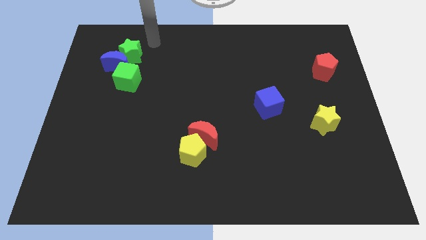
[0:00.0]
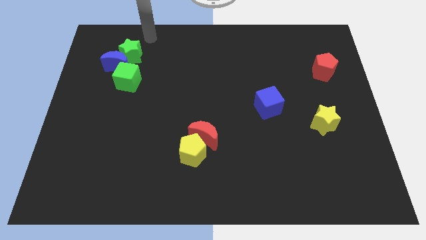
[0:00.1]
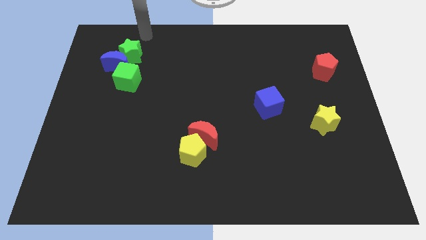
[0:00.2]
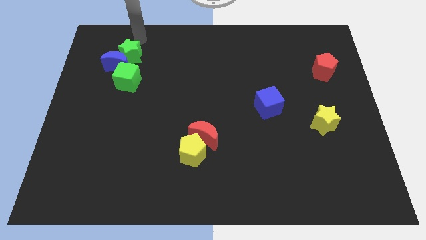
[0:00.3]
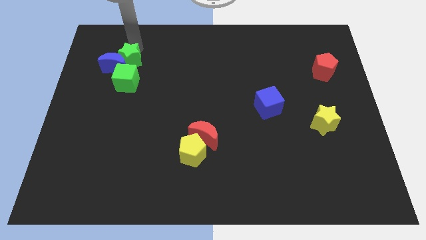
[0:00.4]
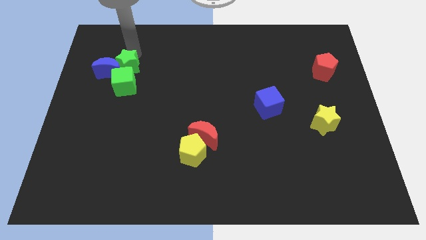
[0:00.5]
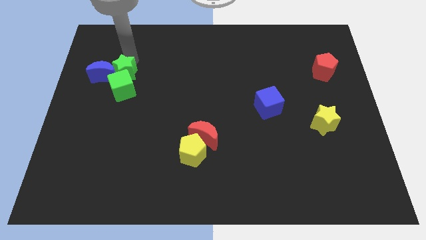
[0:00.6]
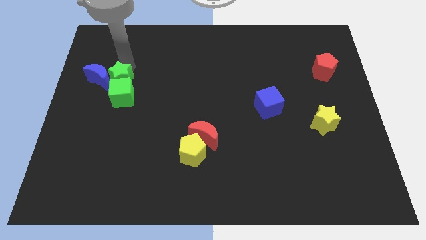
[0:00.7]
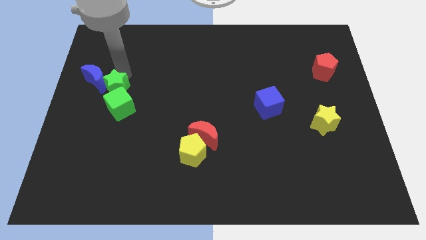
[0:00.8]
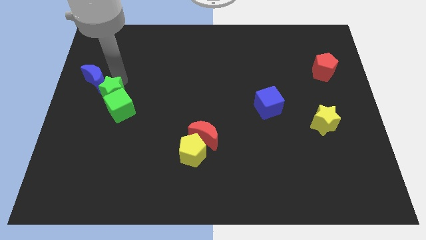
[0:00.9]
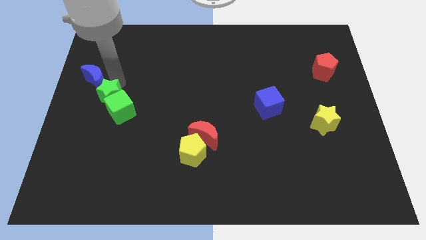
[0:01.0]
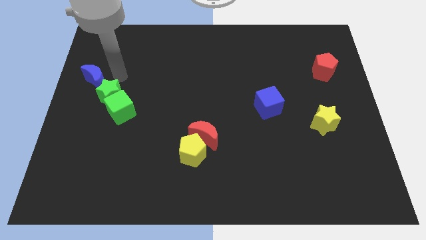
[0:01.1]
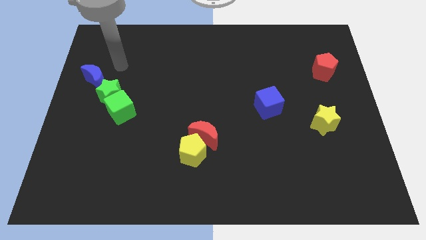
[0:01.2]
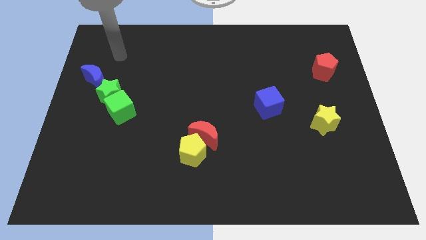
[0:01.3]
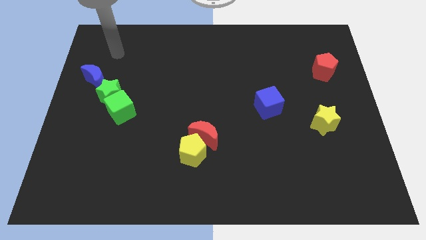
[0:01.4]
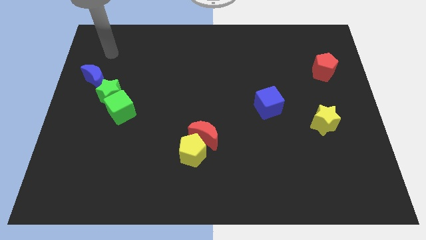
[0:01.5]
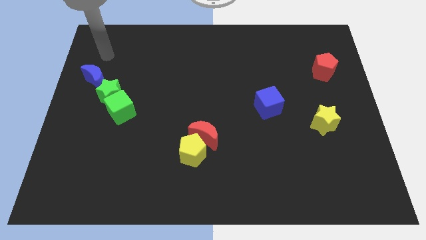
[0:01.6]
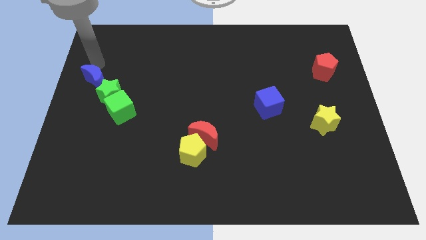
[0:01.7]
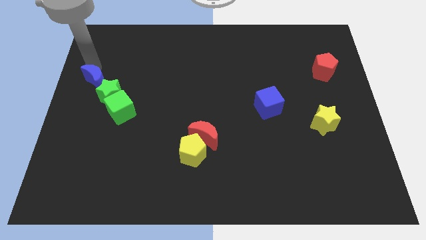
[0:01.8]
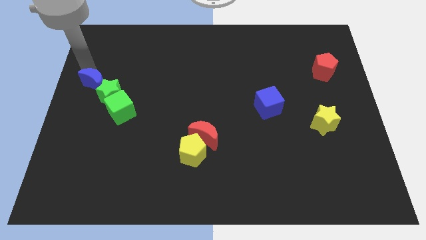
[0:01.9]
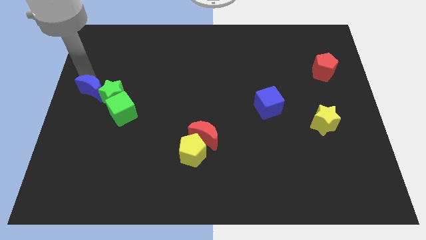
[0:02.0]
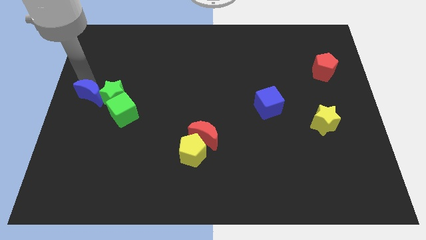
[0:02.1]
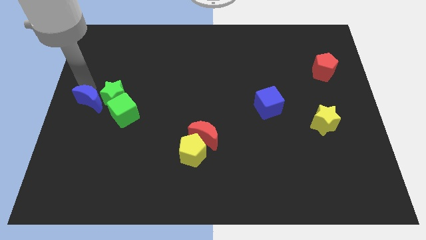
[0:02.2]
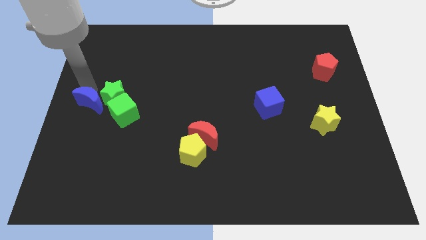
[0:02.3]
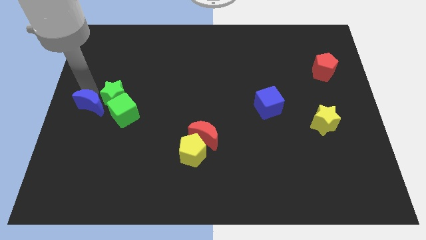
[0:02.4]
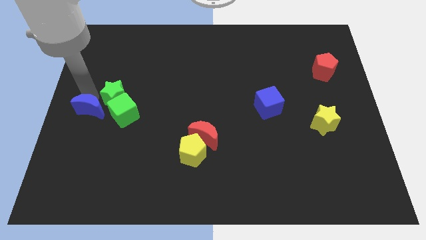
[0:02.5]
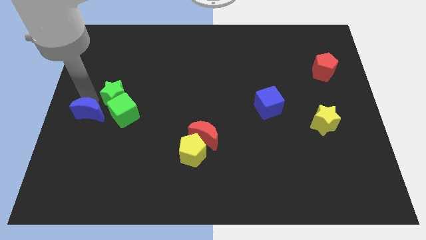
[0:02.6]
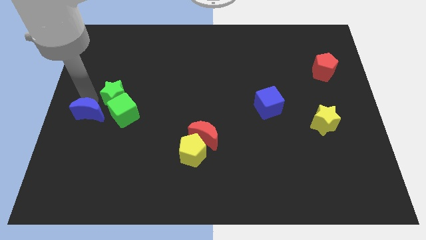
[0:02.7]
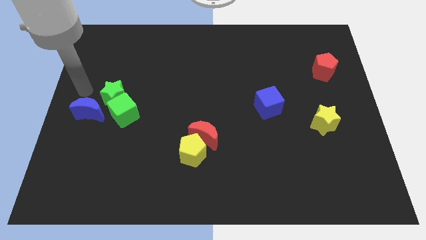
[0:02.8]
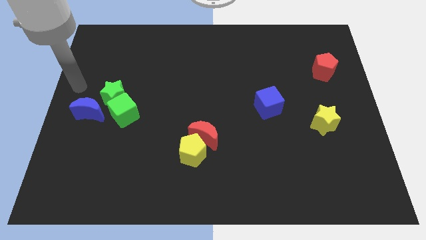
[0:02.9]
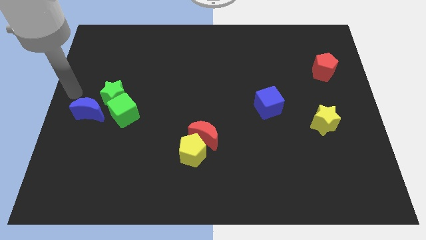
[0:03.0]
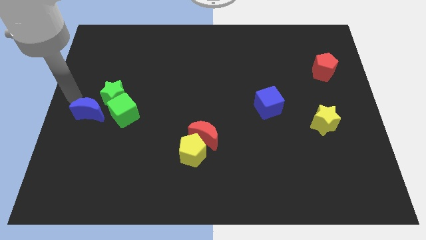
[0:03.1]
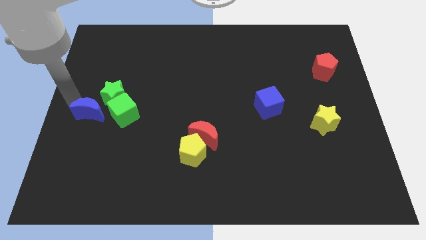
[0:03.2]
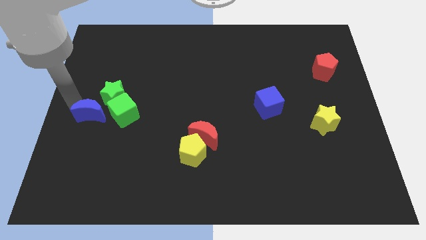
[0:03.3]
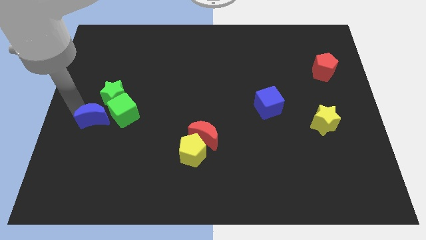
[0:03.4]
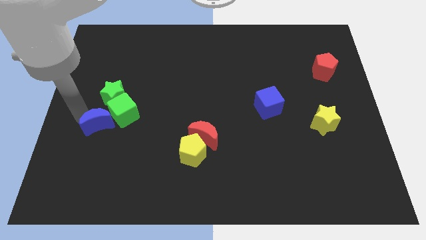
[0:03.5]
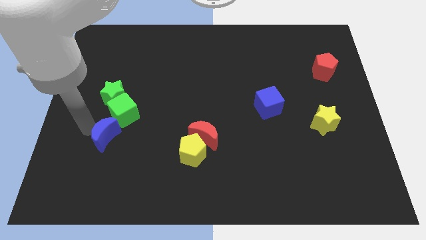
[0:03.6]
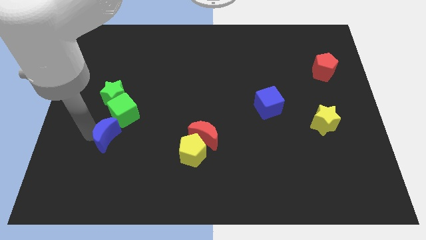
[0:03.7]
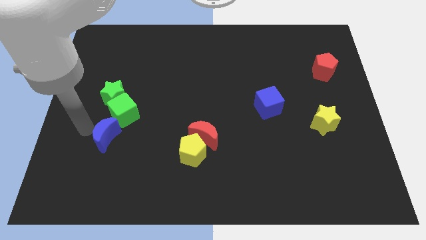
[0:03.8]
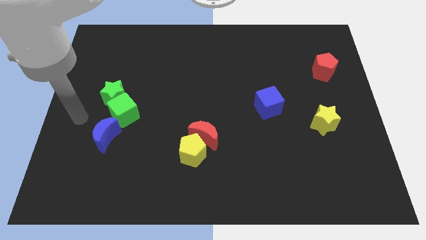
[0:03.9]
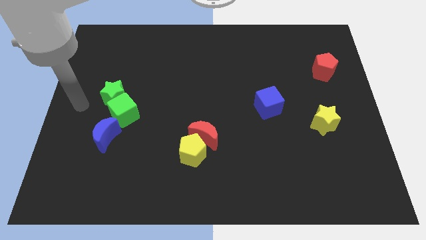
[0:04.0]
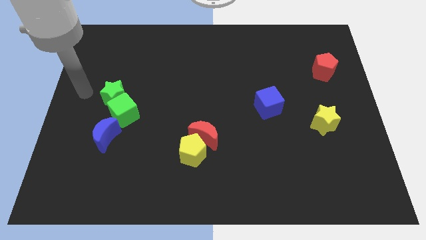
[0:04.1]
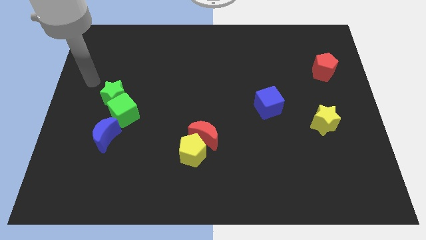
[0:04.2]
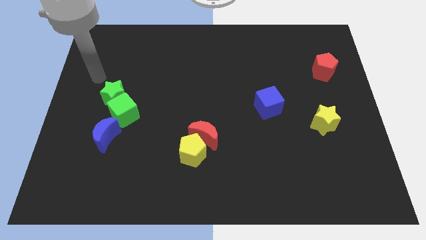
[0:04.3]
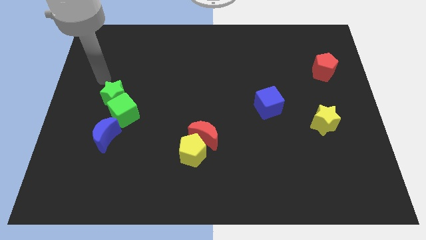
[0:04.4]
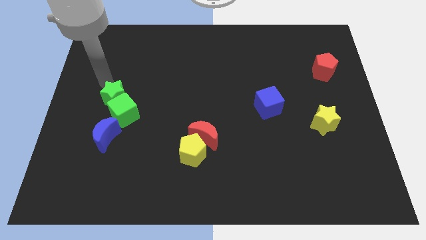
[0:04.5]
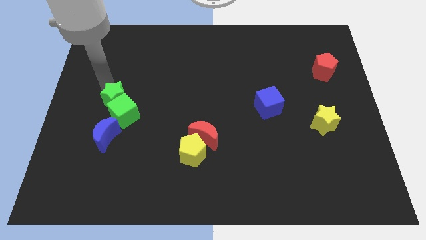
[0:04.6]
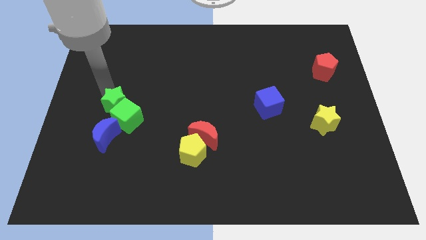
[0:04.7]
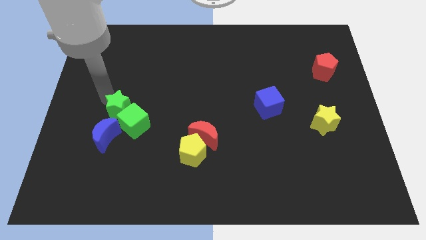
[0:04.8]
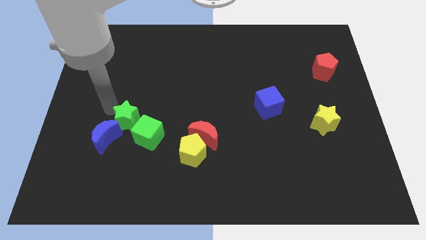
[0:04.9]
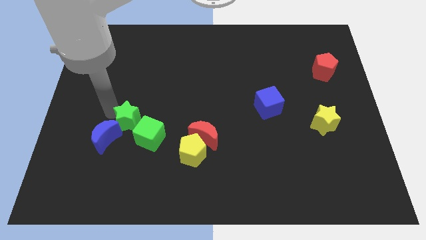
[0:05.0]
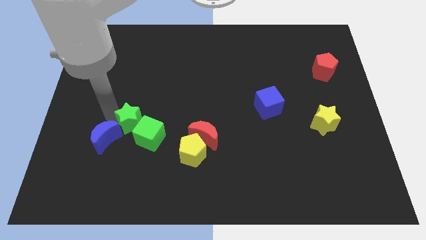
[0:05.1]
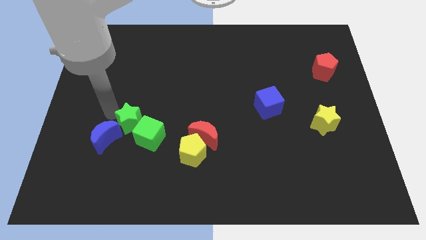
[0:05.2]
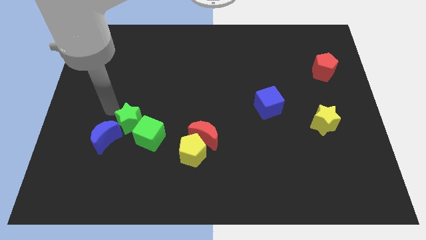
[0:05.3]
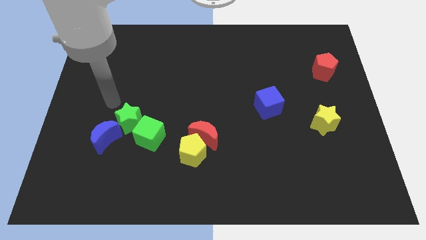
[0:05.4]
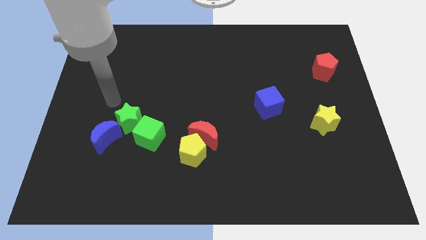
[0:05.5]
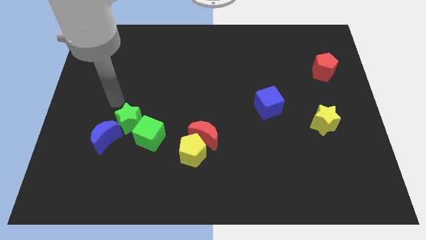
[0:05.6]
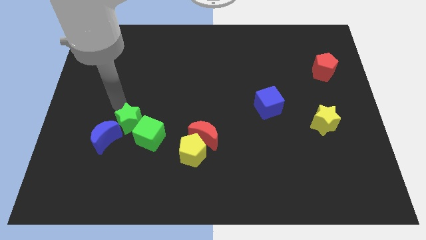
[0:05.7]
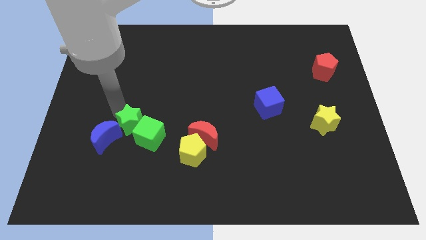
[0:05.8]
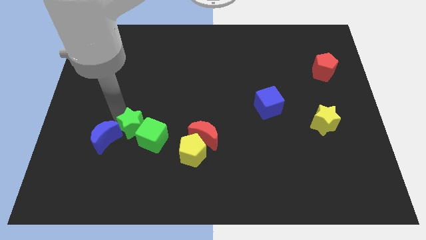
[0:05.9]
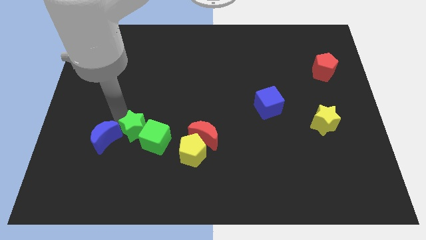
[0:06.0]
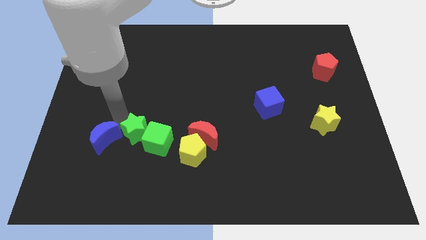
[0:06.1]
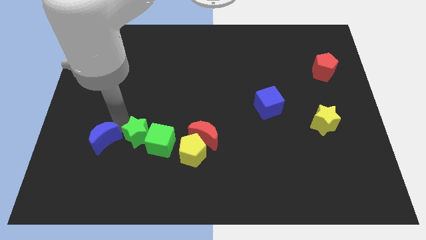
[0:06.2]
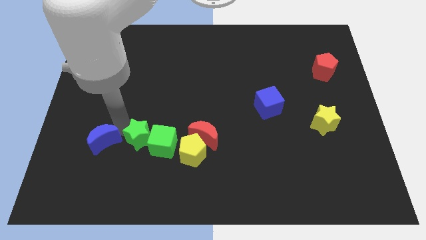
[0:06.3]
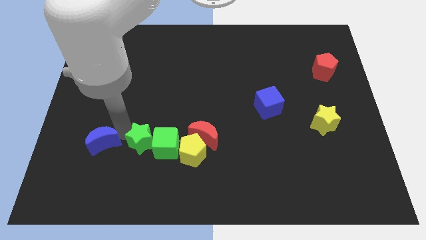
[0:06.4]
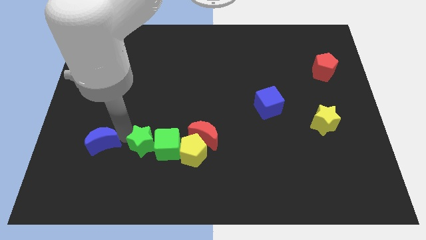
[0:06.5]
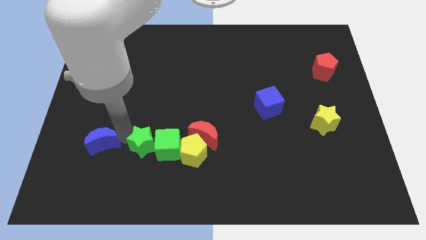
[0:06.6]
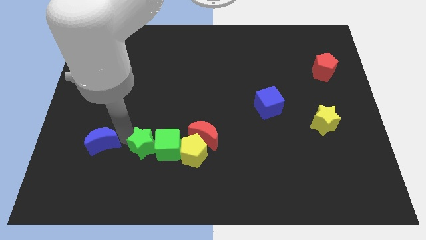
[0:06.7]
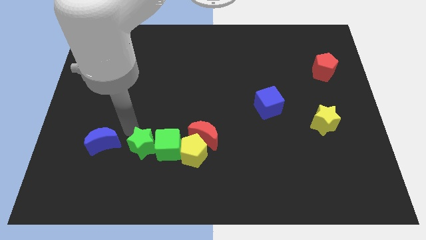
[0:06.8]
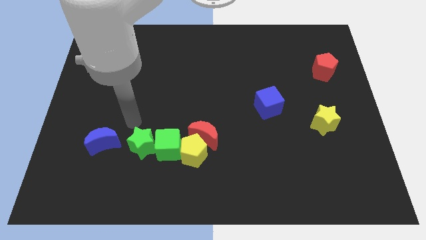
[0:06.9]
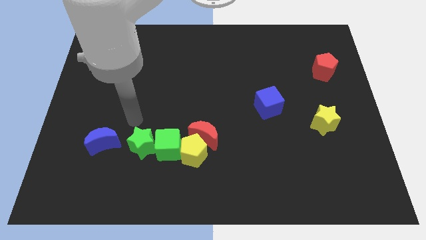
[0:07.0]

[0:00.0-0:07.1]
form a horizontal line using blue moon green star and green cube beside the yellow pentagon

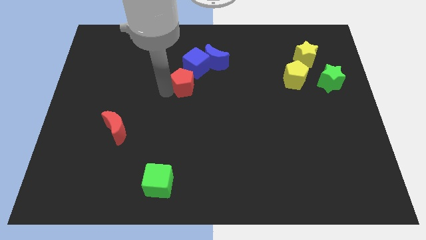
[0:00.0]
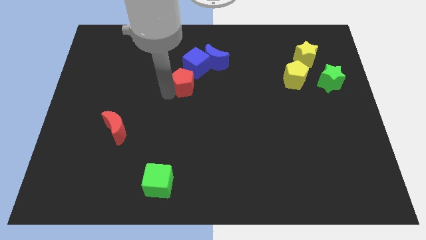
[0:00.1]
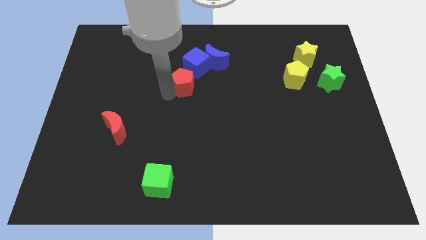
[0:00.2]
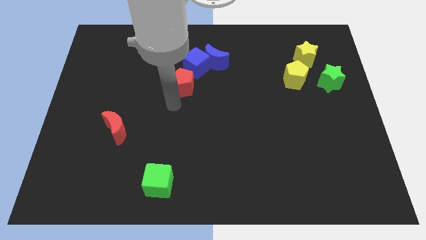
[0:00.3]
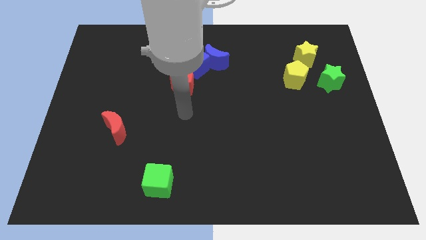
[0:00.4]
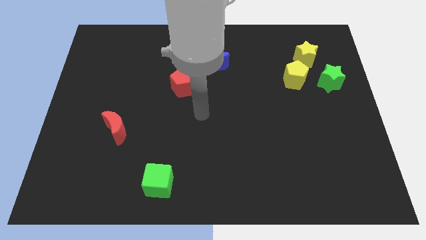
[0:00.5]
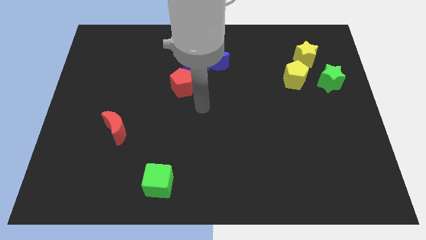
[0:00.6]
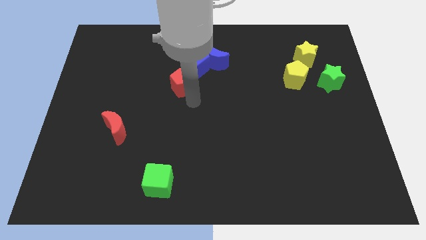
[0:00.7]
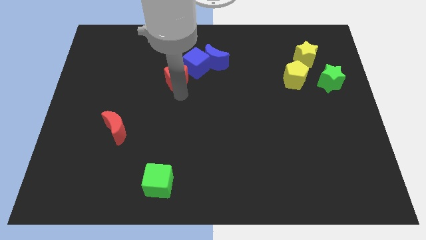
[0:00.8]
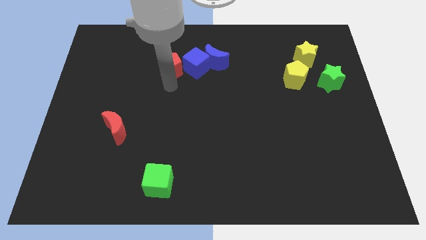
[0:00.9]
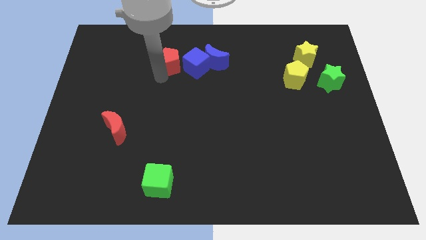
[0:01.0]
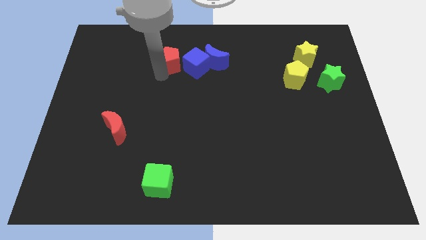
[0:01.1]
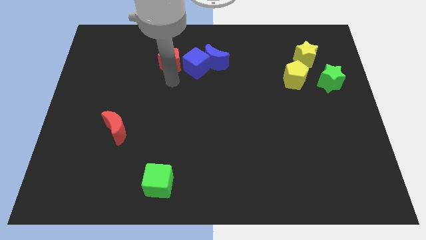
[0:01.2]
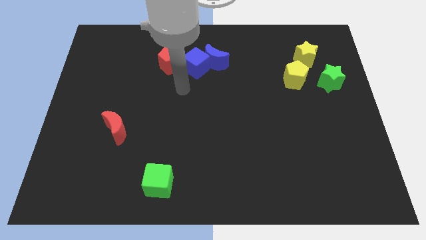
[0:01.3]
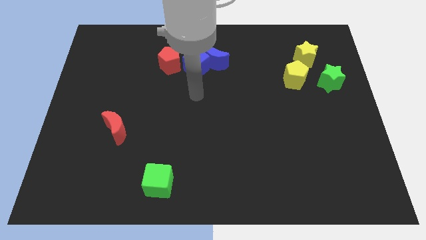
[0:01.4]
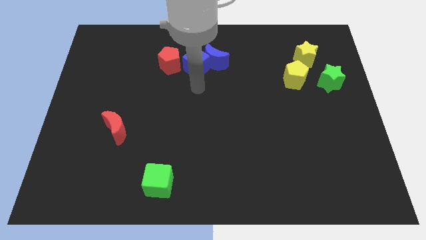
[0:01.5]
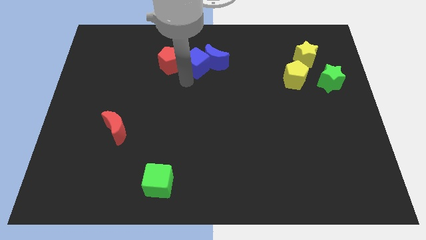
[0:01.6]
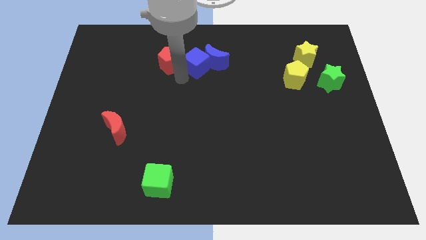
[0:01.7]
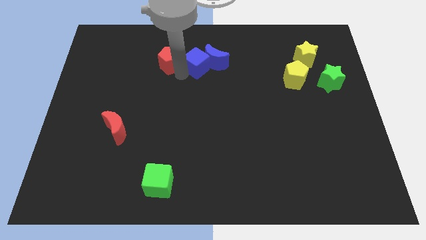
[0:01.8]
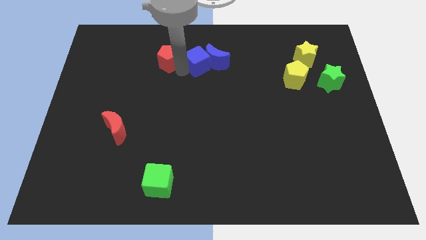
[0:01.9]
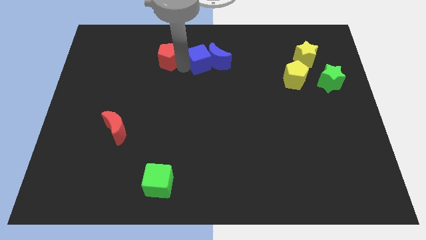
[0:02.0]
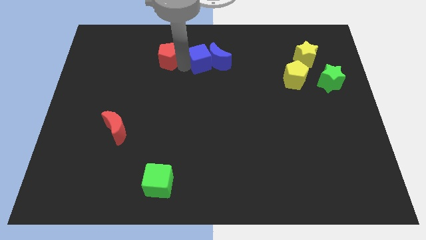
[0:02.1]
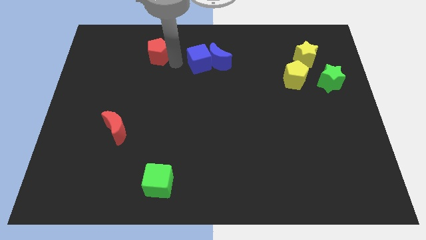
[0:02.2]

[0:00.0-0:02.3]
put your arm in between the red pentagon and blue cube
